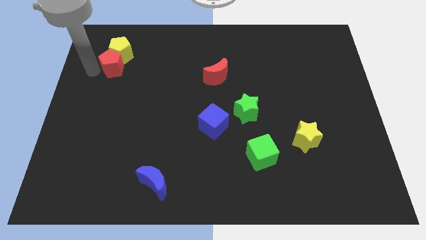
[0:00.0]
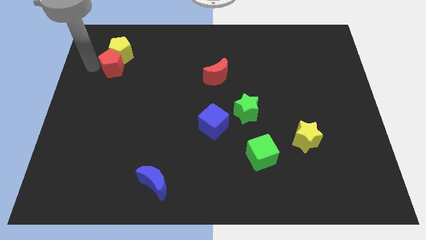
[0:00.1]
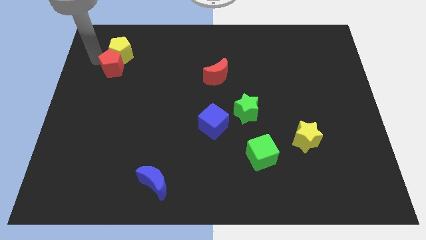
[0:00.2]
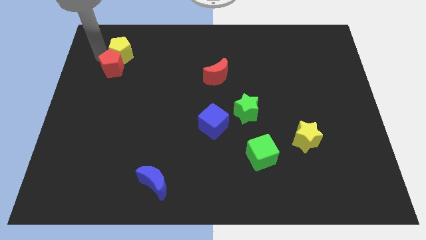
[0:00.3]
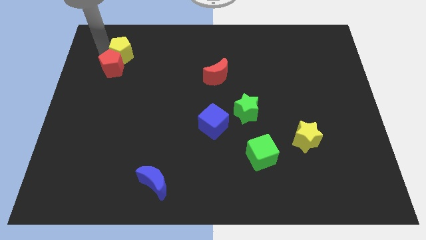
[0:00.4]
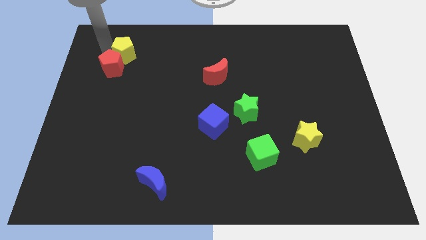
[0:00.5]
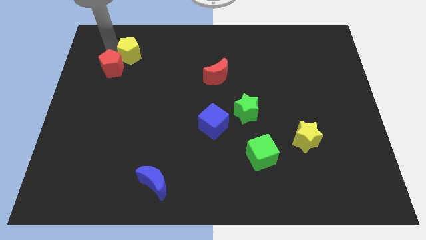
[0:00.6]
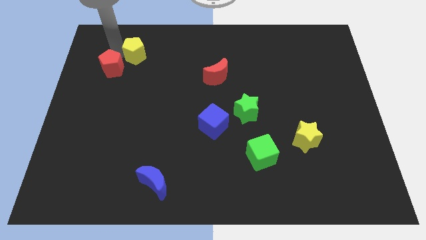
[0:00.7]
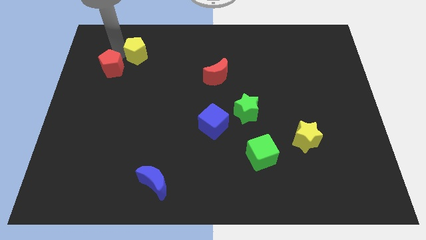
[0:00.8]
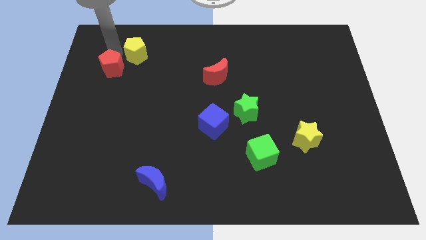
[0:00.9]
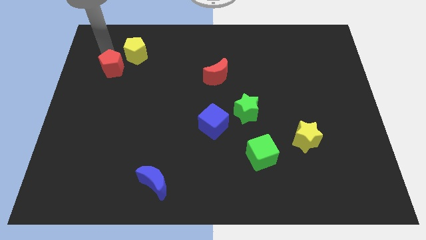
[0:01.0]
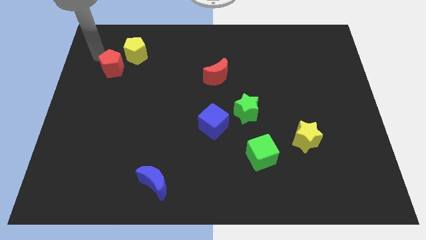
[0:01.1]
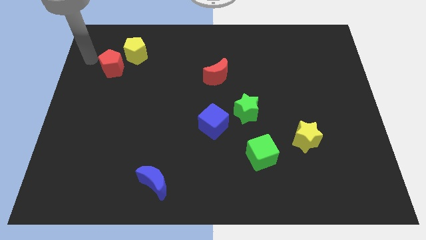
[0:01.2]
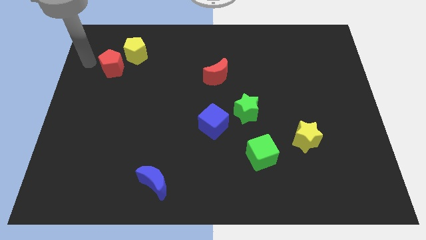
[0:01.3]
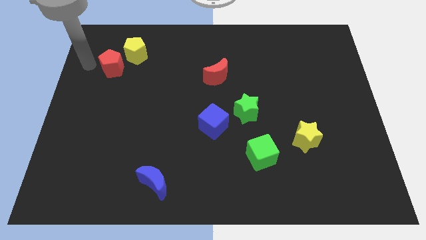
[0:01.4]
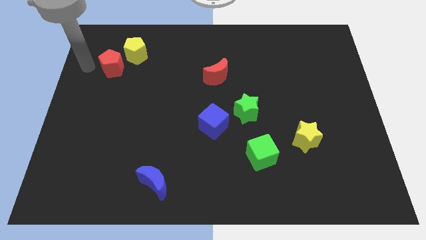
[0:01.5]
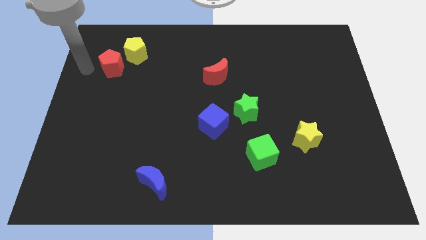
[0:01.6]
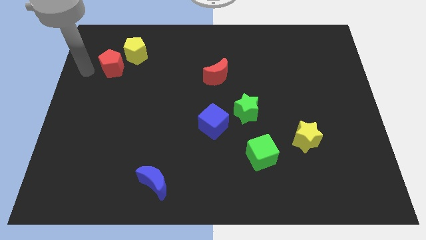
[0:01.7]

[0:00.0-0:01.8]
push the yellow pentagon diagonally left of the red pentagon

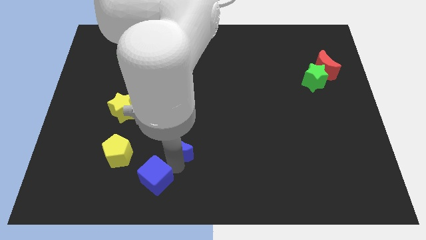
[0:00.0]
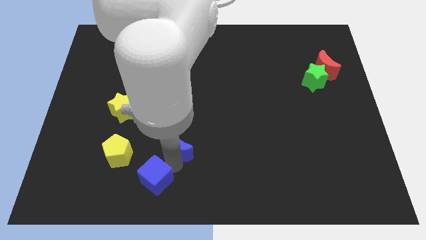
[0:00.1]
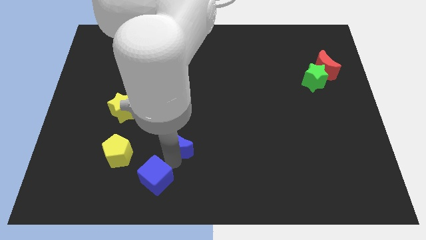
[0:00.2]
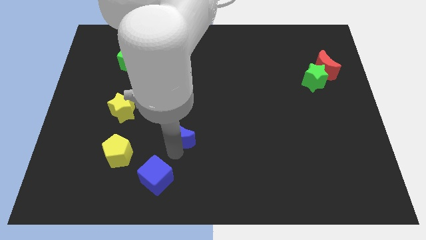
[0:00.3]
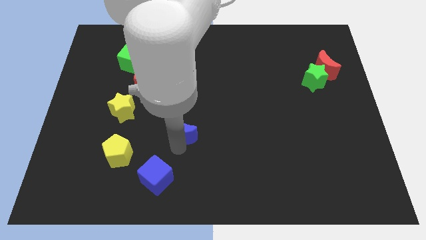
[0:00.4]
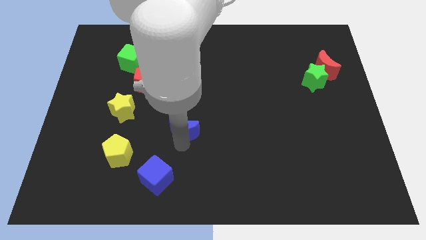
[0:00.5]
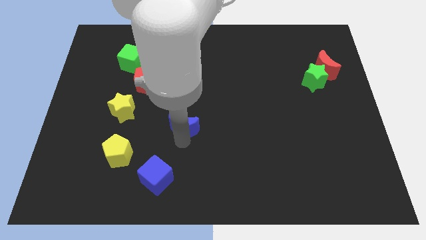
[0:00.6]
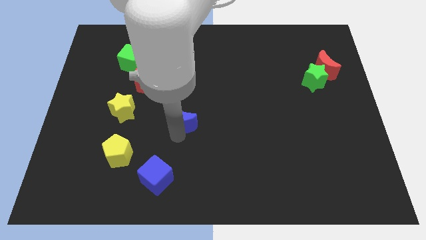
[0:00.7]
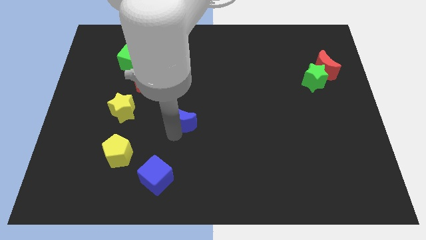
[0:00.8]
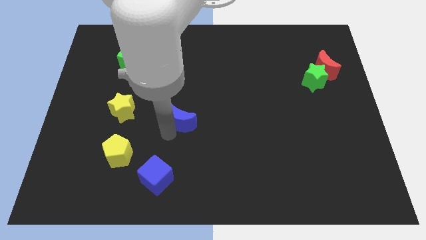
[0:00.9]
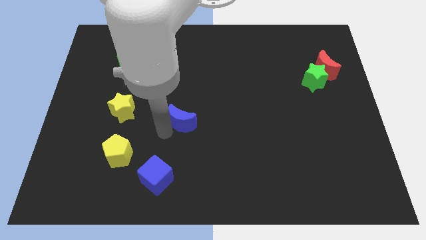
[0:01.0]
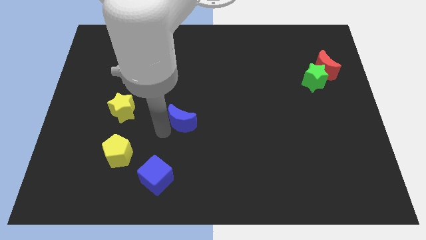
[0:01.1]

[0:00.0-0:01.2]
move blue moon slightly up

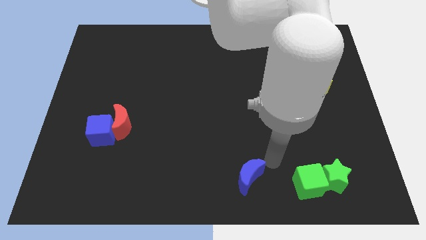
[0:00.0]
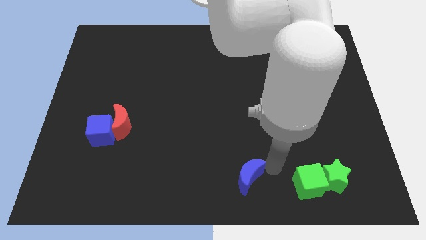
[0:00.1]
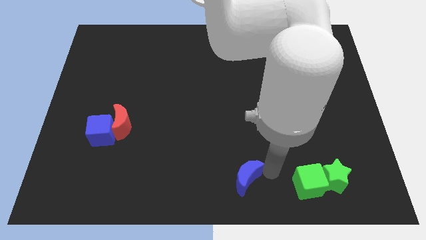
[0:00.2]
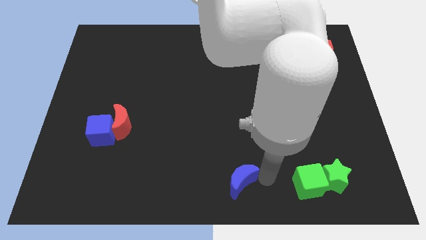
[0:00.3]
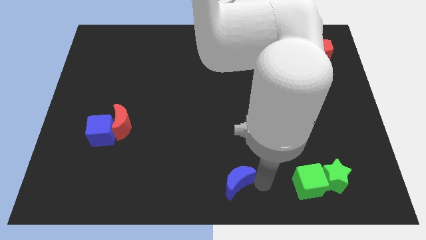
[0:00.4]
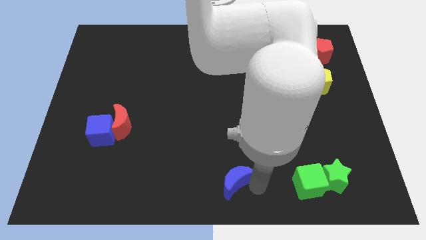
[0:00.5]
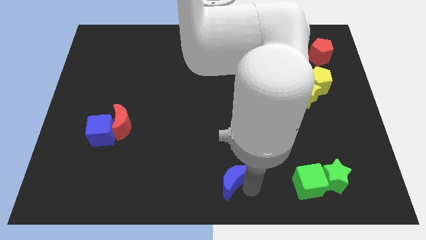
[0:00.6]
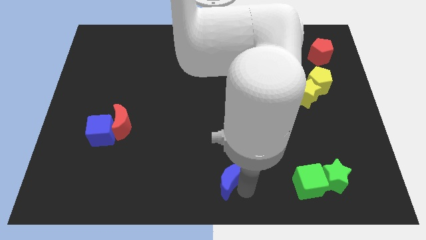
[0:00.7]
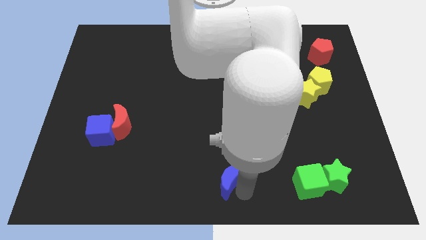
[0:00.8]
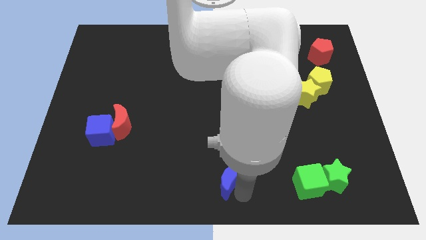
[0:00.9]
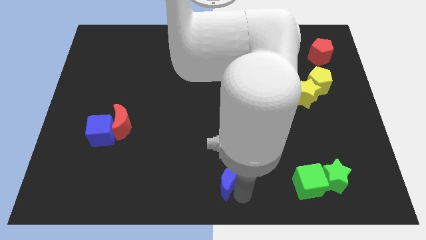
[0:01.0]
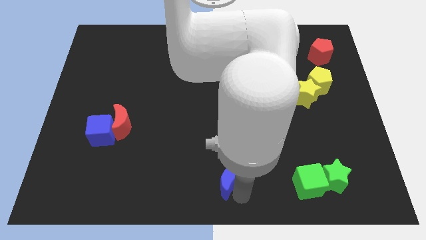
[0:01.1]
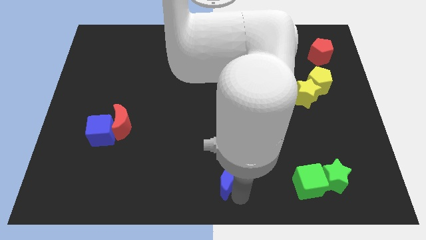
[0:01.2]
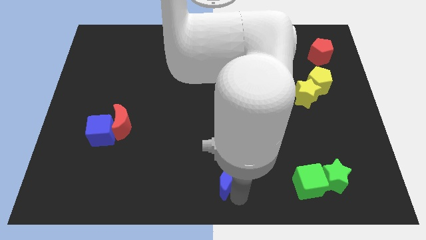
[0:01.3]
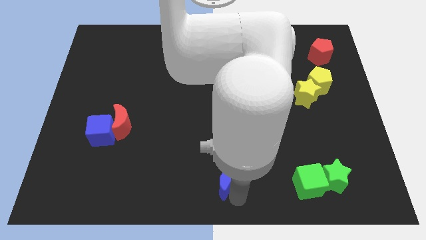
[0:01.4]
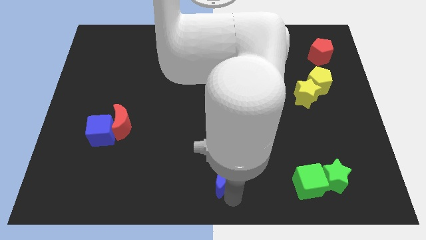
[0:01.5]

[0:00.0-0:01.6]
move the blue moon towards the left

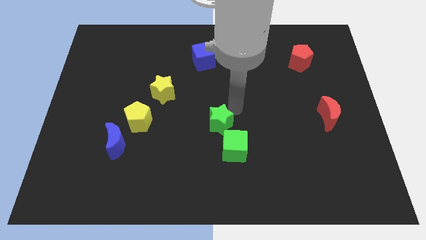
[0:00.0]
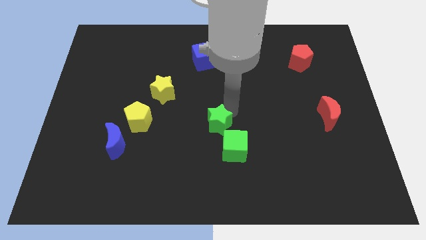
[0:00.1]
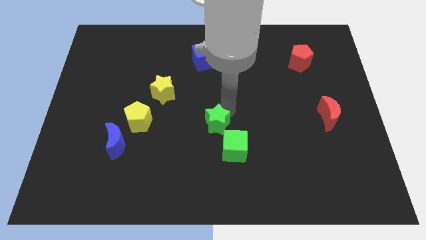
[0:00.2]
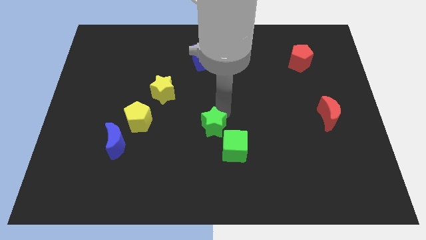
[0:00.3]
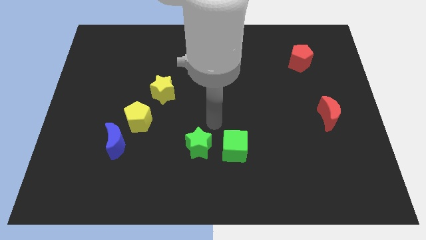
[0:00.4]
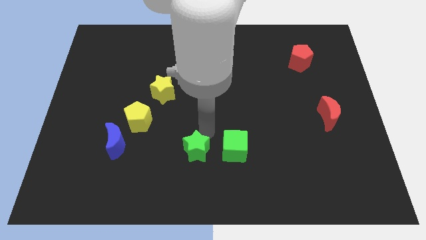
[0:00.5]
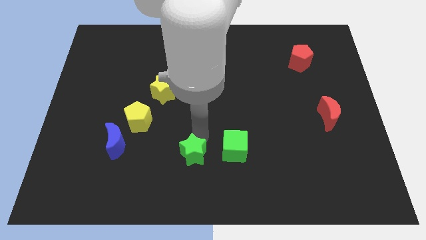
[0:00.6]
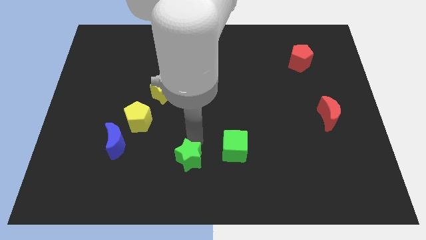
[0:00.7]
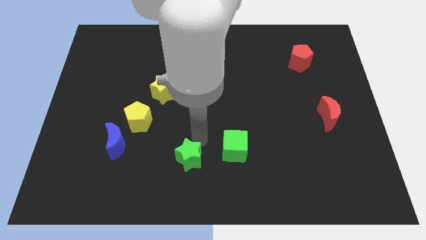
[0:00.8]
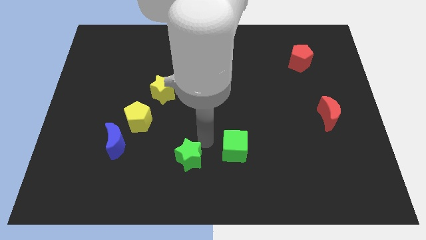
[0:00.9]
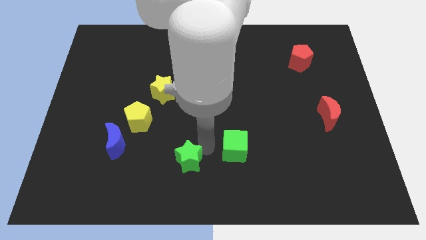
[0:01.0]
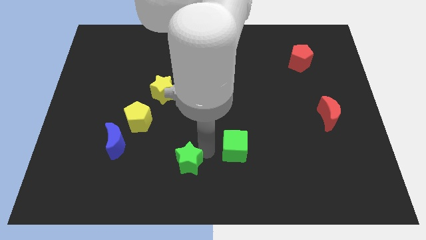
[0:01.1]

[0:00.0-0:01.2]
slightly push the green star

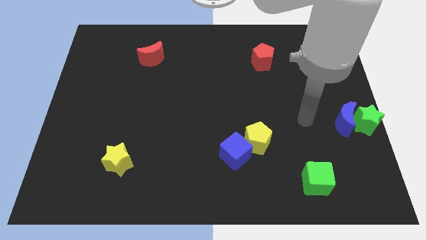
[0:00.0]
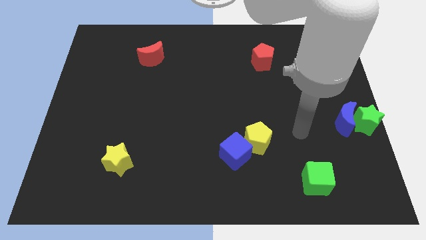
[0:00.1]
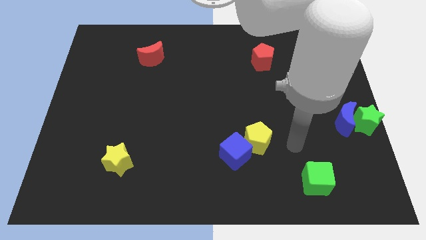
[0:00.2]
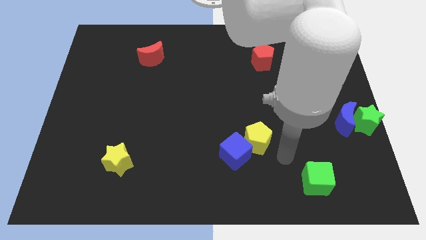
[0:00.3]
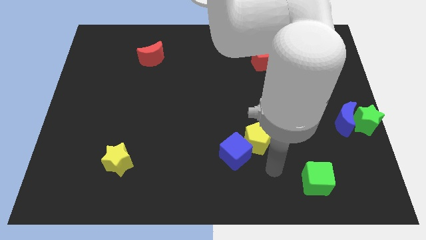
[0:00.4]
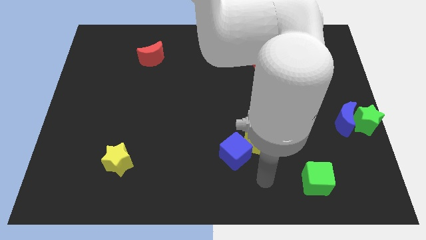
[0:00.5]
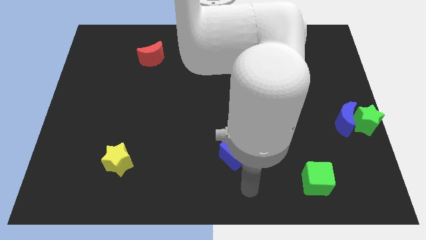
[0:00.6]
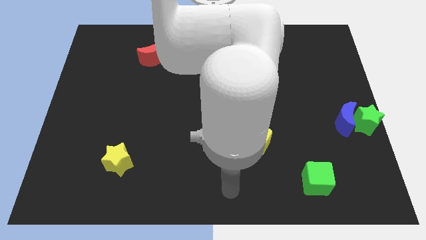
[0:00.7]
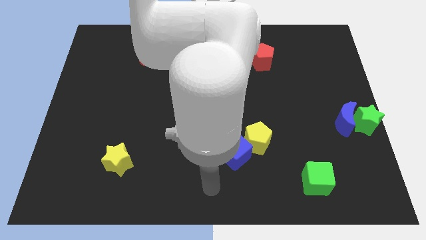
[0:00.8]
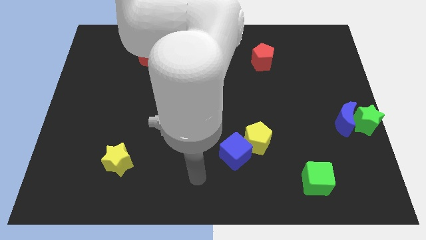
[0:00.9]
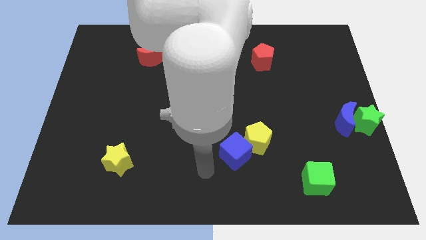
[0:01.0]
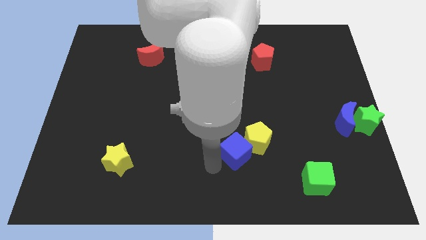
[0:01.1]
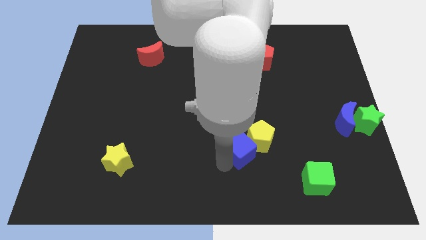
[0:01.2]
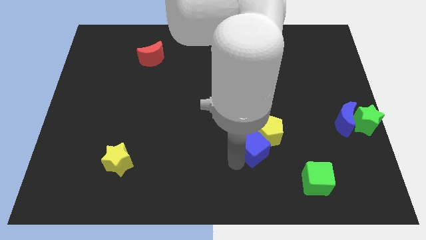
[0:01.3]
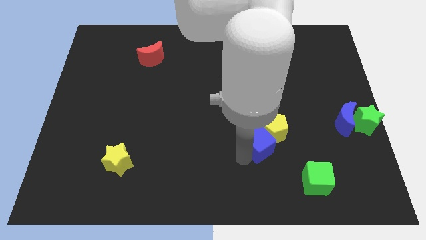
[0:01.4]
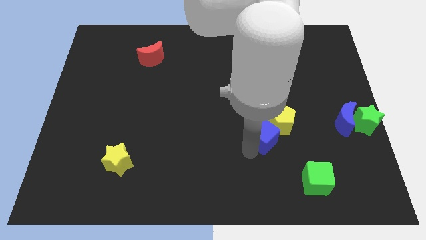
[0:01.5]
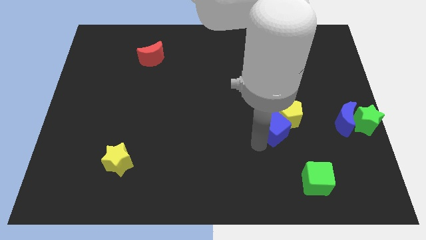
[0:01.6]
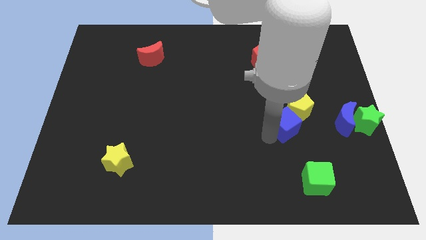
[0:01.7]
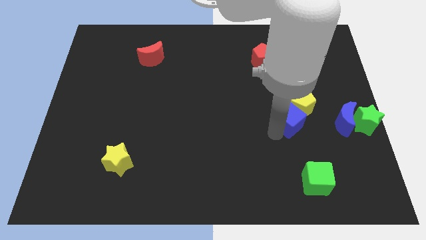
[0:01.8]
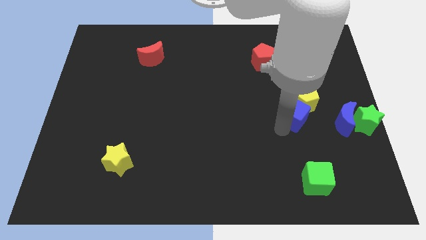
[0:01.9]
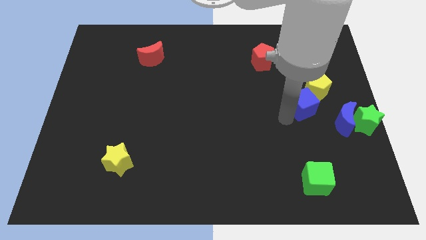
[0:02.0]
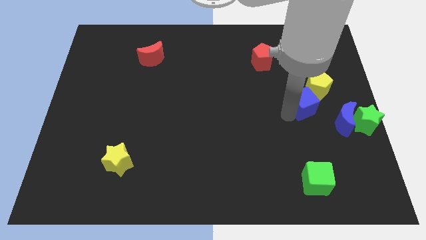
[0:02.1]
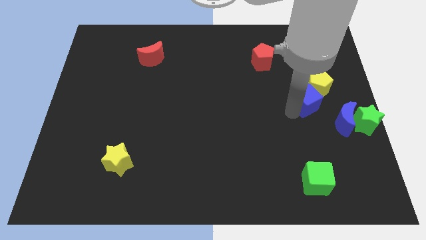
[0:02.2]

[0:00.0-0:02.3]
push blue cube above green cube

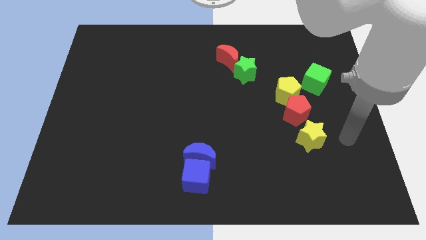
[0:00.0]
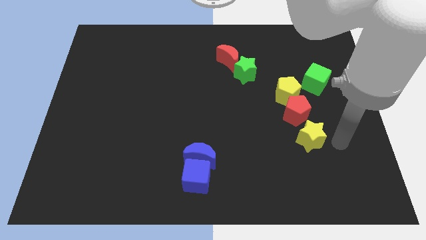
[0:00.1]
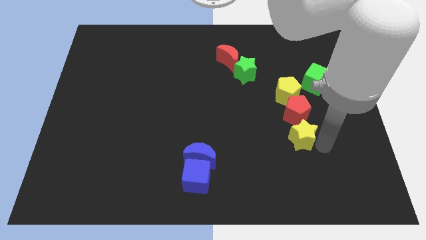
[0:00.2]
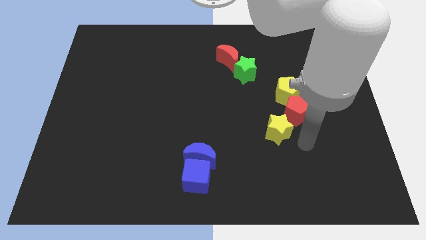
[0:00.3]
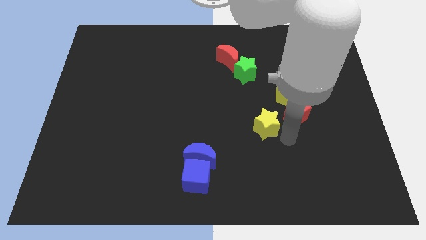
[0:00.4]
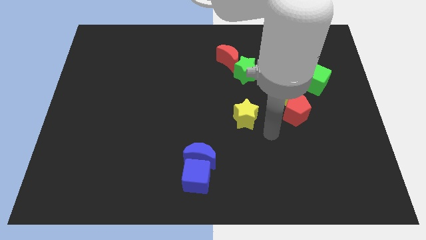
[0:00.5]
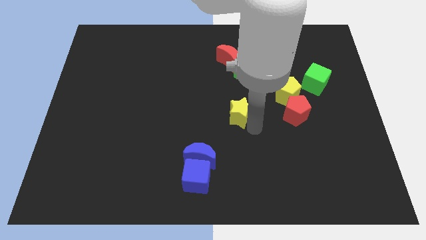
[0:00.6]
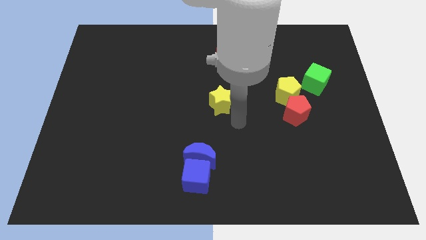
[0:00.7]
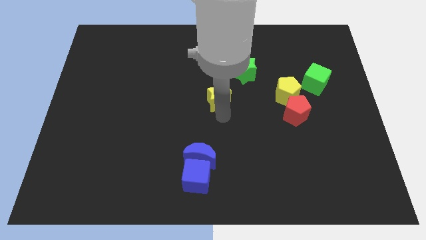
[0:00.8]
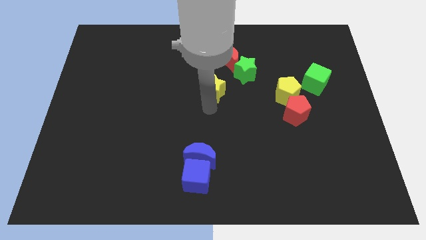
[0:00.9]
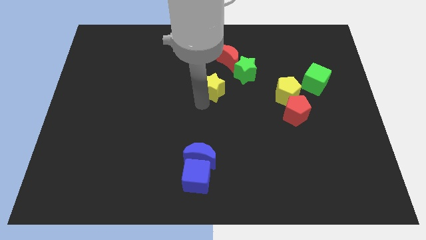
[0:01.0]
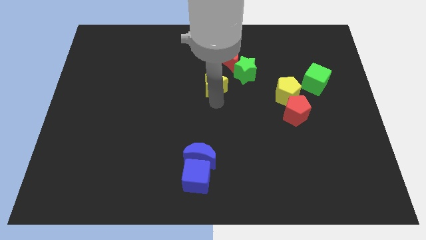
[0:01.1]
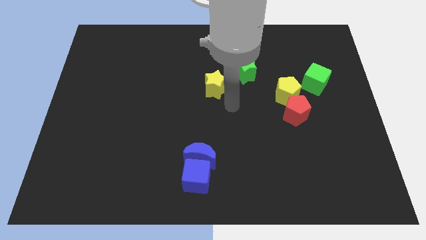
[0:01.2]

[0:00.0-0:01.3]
move the yellow star to the center of the board
